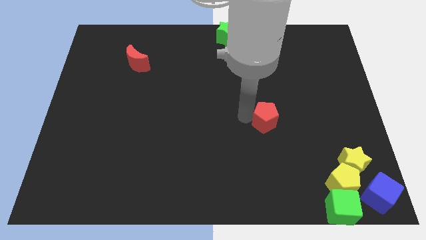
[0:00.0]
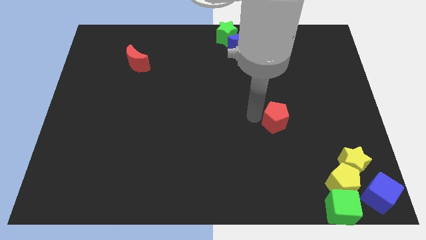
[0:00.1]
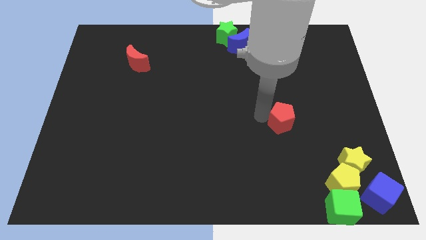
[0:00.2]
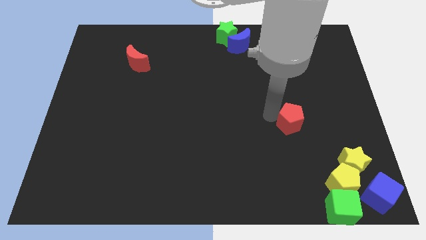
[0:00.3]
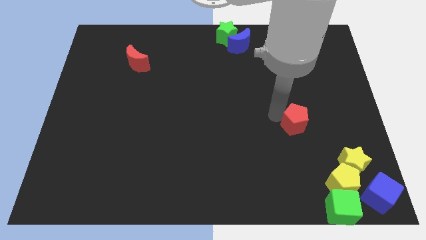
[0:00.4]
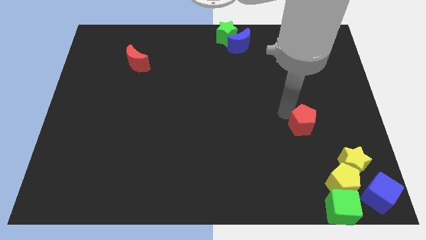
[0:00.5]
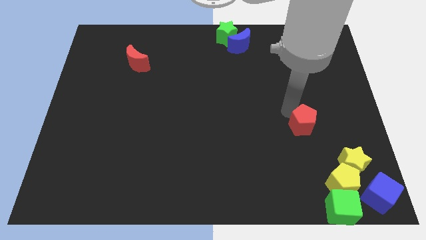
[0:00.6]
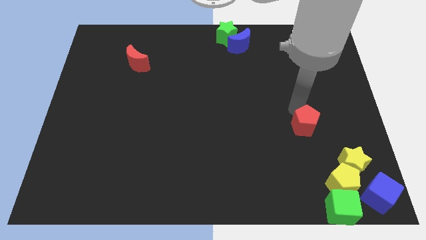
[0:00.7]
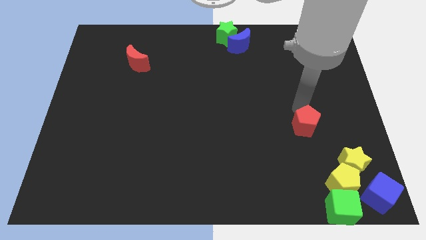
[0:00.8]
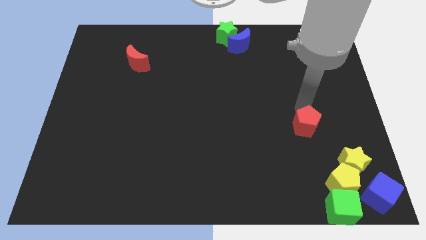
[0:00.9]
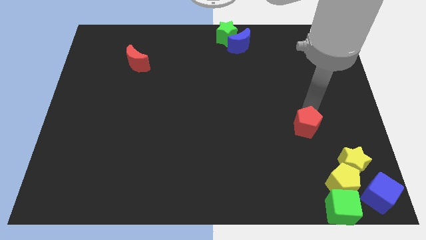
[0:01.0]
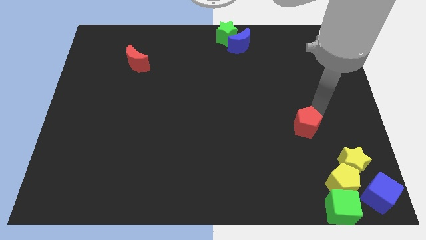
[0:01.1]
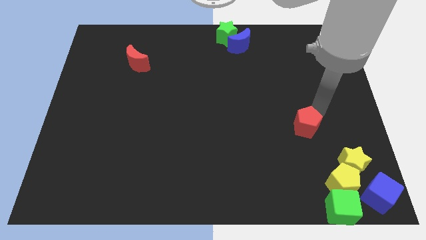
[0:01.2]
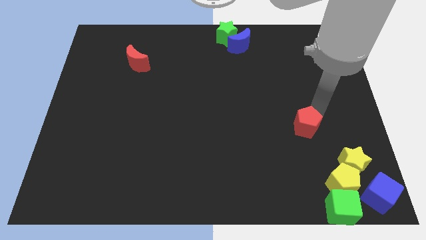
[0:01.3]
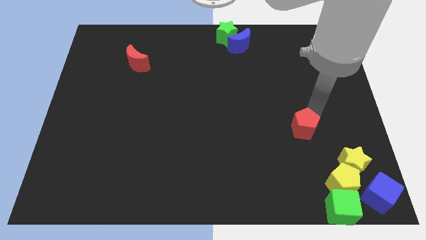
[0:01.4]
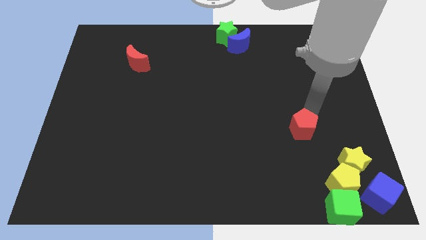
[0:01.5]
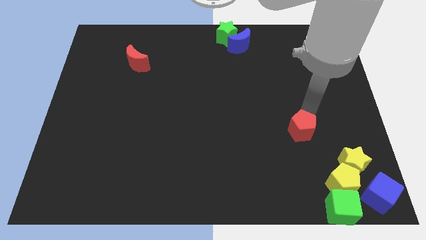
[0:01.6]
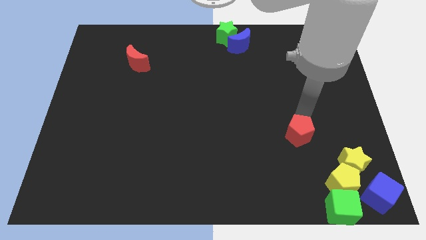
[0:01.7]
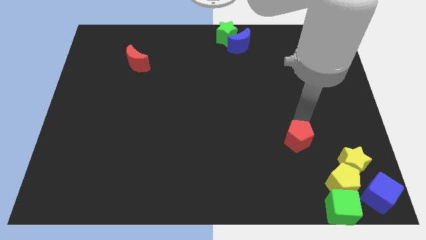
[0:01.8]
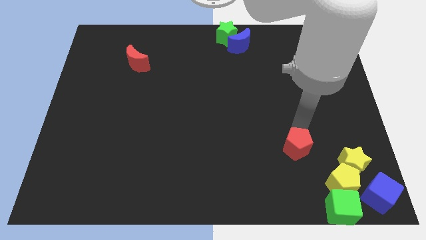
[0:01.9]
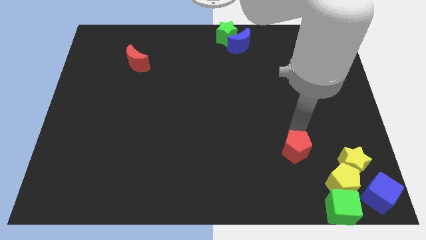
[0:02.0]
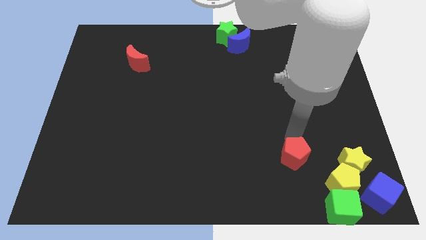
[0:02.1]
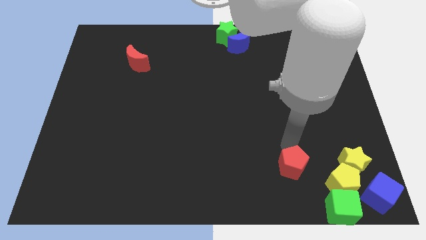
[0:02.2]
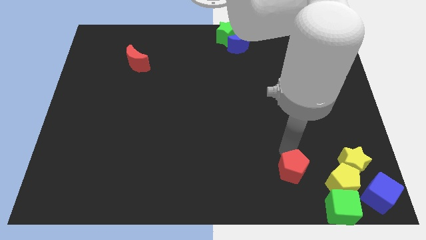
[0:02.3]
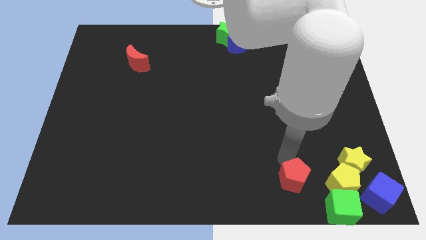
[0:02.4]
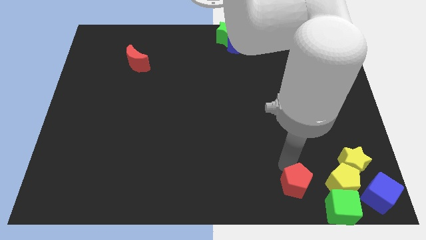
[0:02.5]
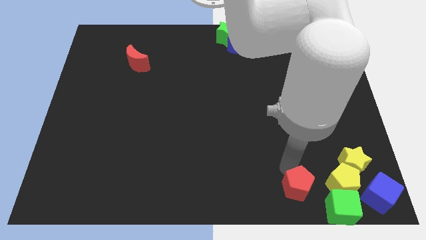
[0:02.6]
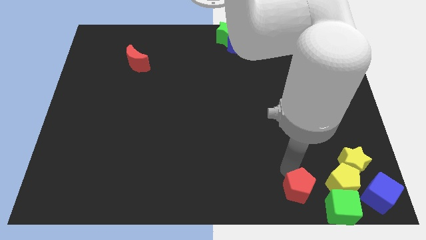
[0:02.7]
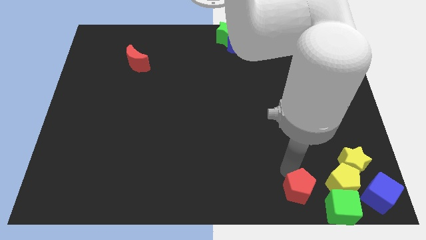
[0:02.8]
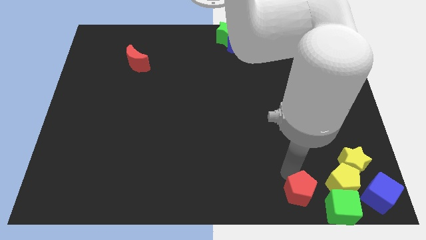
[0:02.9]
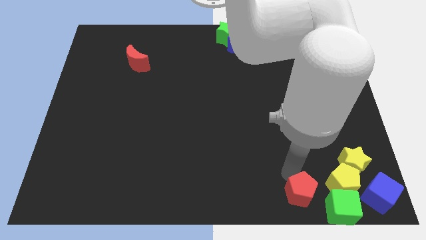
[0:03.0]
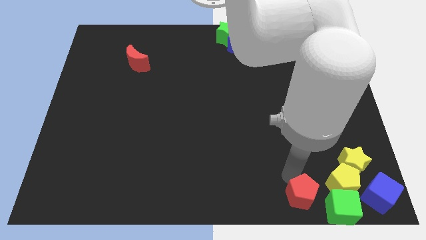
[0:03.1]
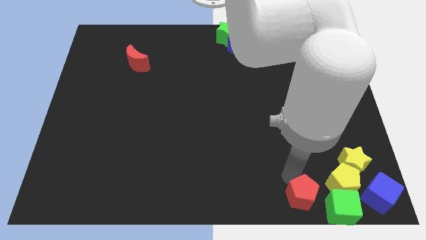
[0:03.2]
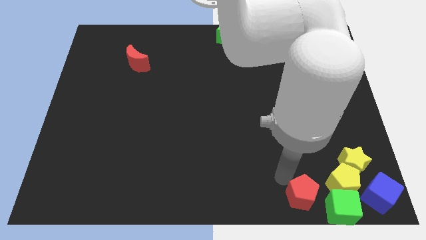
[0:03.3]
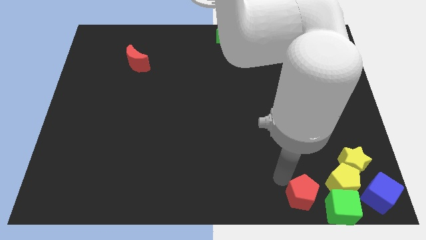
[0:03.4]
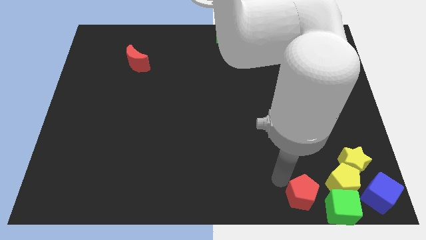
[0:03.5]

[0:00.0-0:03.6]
move the red pentagon towards the group of blocks

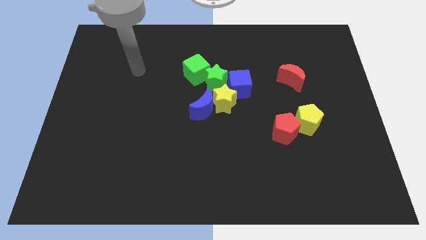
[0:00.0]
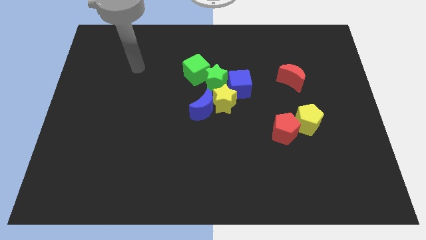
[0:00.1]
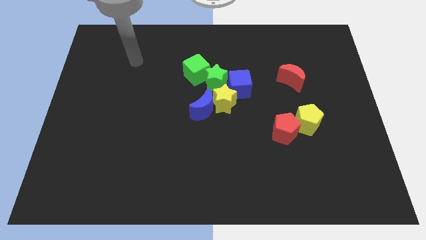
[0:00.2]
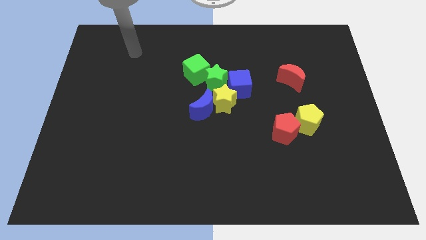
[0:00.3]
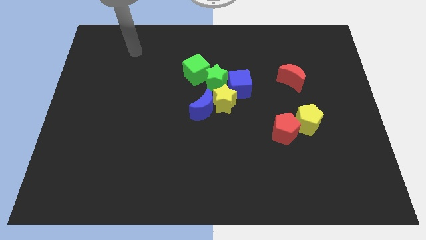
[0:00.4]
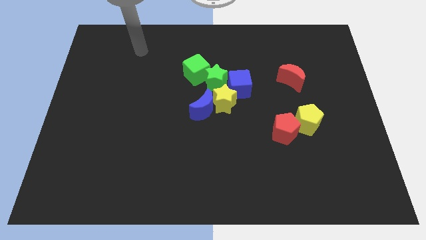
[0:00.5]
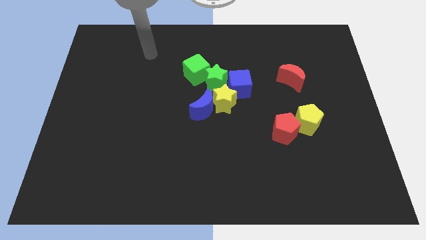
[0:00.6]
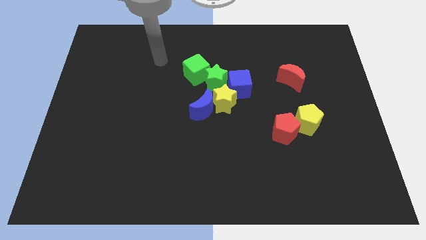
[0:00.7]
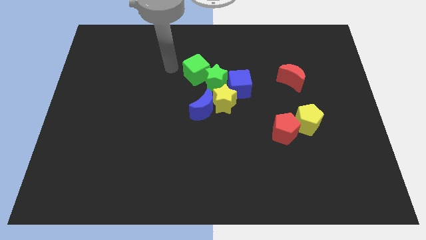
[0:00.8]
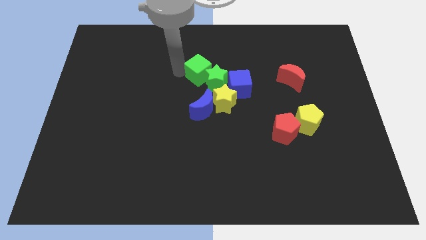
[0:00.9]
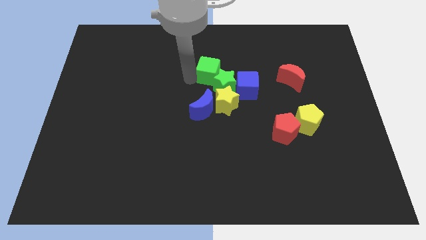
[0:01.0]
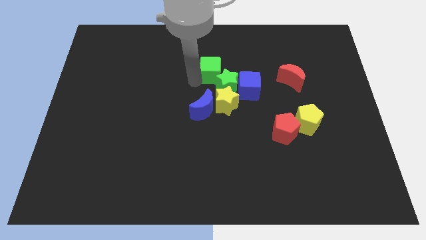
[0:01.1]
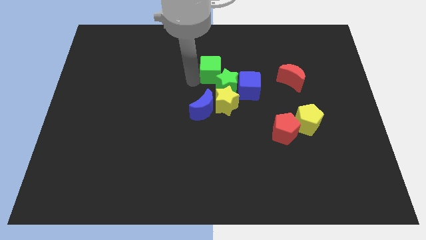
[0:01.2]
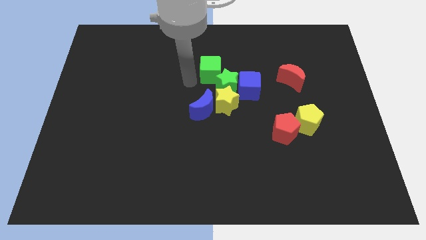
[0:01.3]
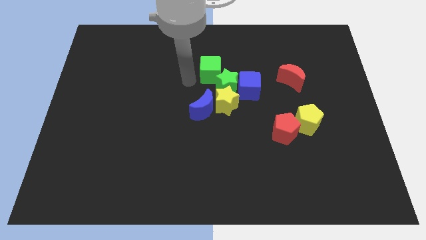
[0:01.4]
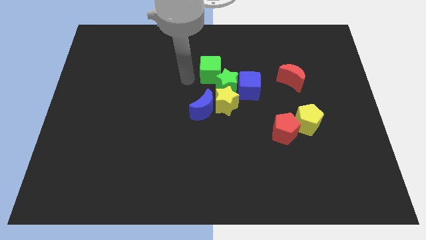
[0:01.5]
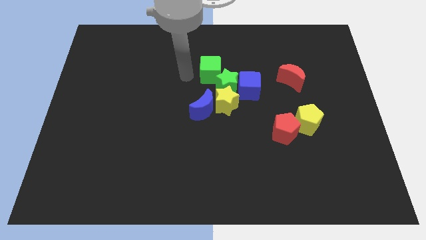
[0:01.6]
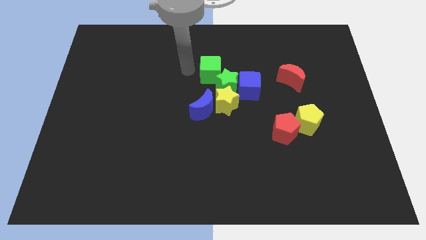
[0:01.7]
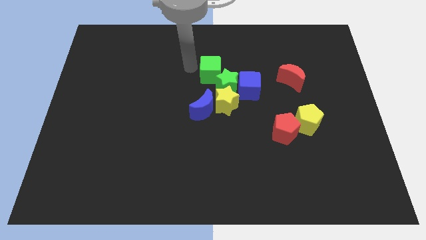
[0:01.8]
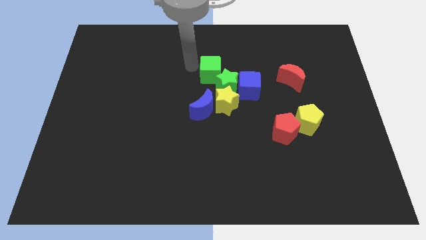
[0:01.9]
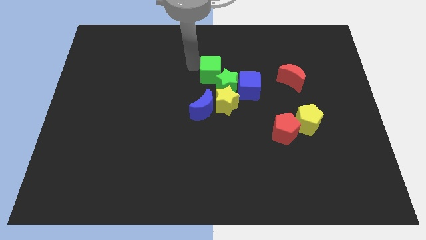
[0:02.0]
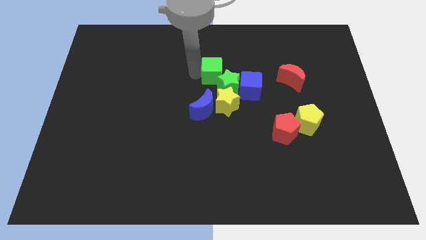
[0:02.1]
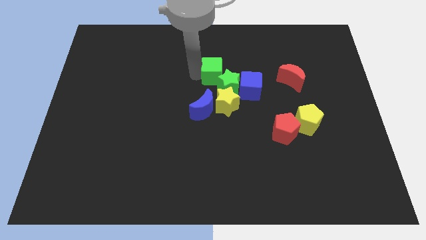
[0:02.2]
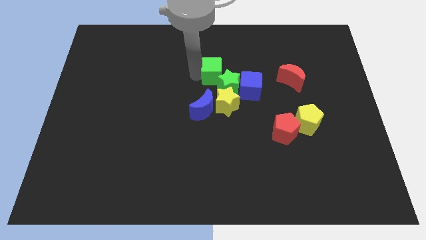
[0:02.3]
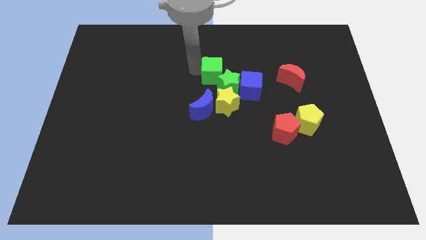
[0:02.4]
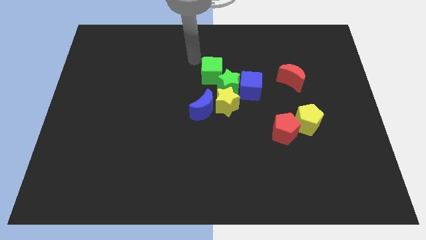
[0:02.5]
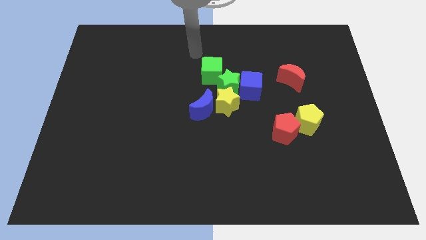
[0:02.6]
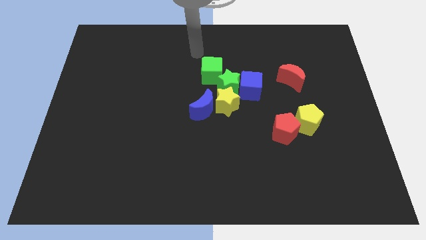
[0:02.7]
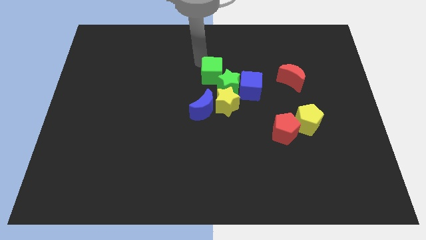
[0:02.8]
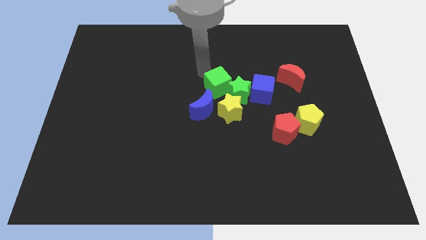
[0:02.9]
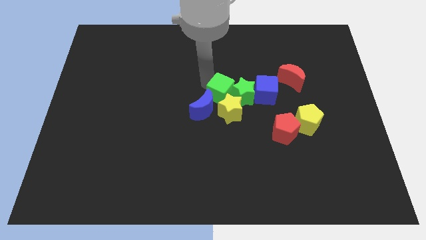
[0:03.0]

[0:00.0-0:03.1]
push the green cube to the top right side of the green star

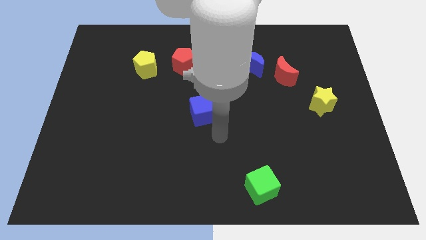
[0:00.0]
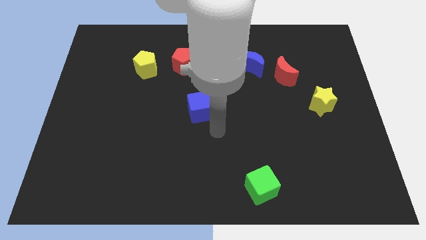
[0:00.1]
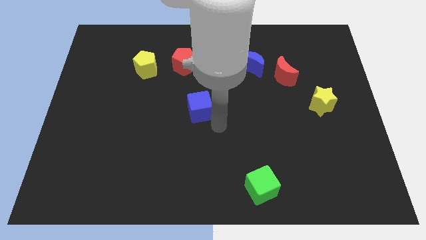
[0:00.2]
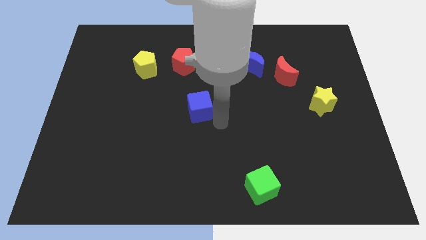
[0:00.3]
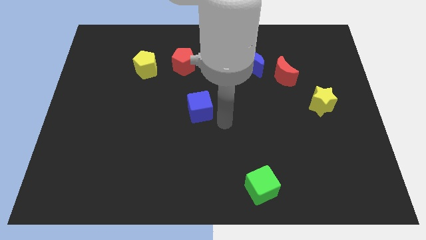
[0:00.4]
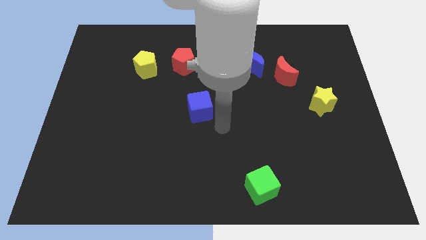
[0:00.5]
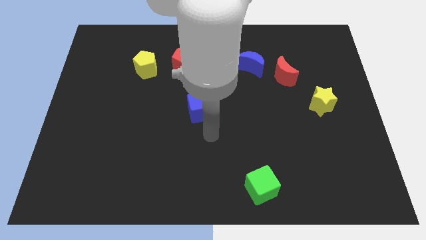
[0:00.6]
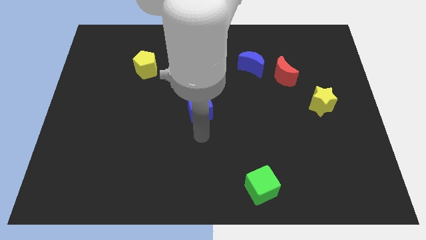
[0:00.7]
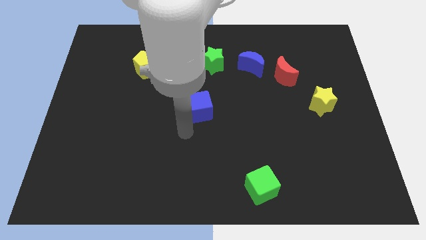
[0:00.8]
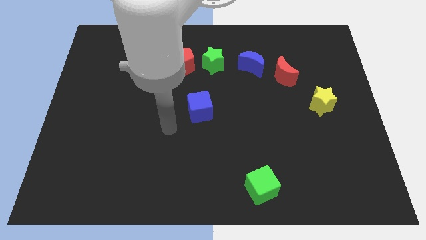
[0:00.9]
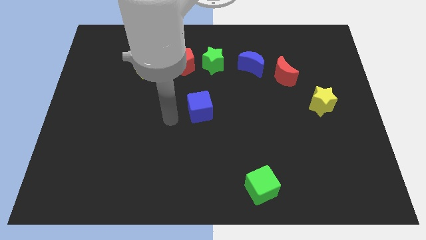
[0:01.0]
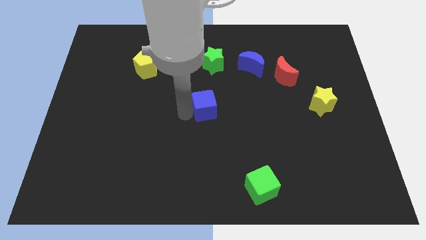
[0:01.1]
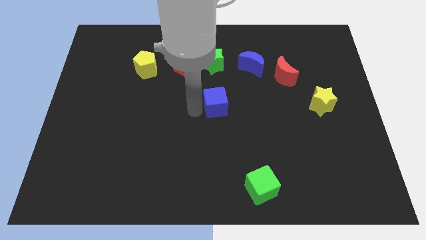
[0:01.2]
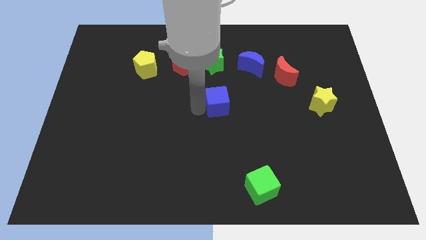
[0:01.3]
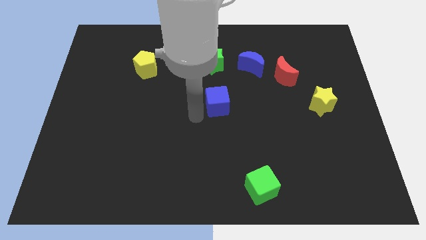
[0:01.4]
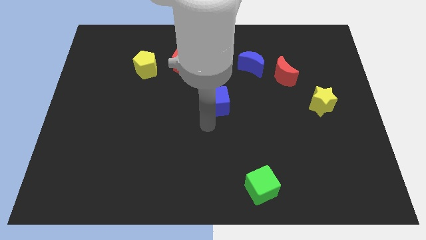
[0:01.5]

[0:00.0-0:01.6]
put the blue cube below the green star

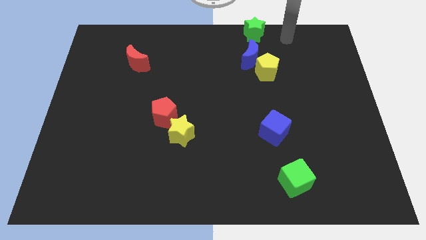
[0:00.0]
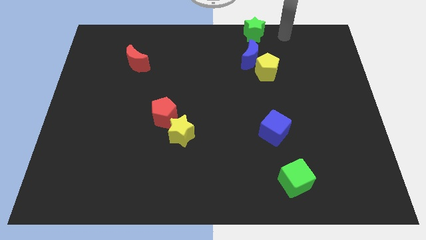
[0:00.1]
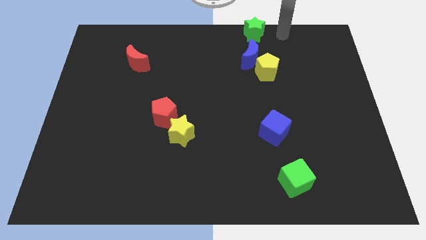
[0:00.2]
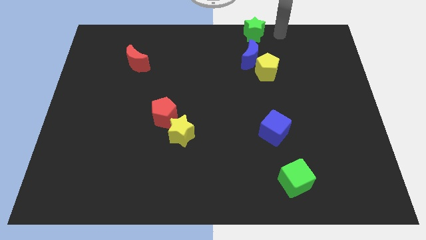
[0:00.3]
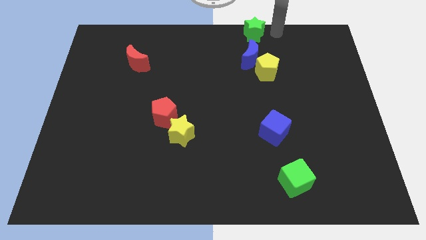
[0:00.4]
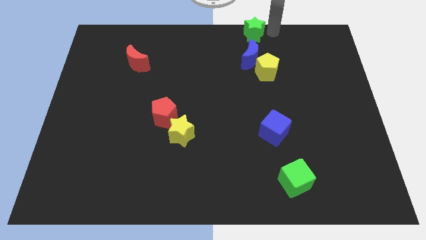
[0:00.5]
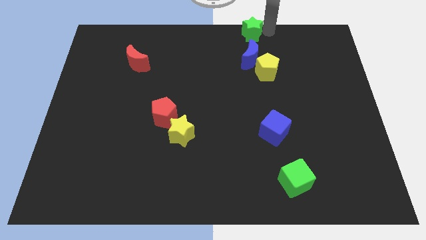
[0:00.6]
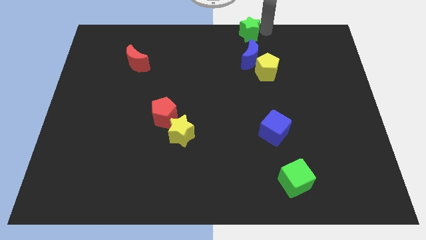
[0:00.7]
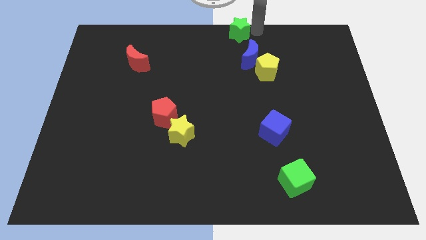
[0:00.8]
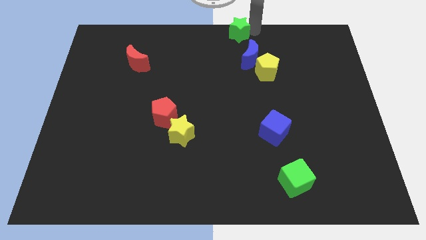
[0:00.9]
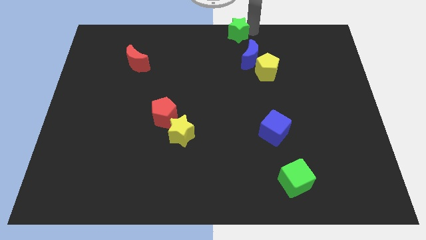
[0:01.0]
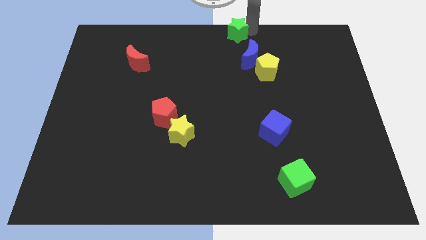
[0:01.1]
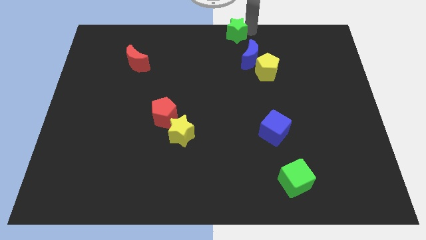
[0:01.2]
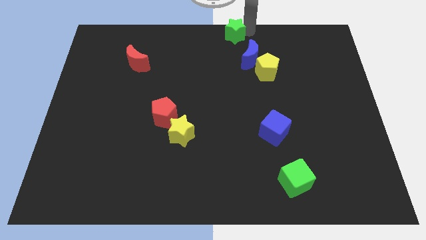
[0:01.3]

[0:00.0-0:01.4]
move the green star to the top center of the board
